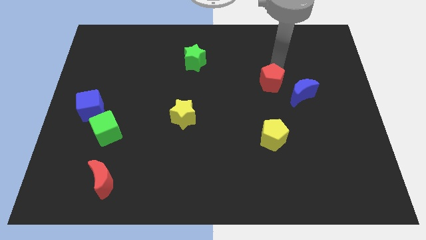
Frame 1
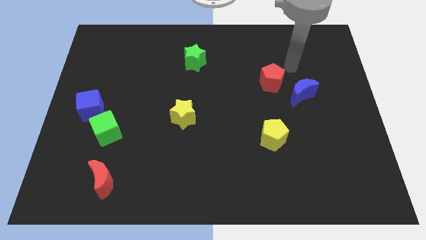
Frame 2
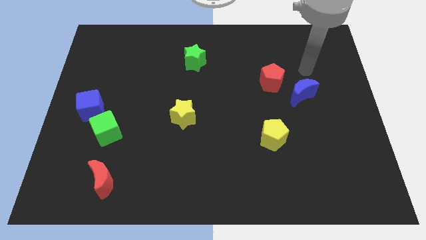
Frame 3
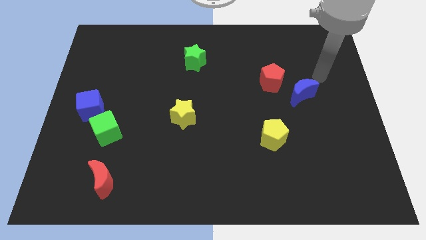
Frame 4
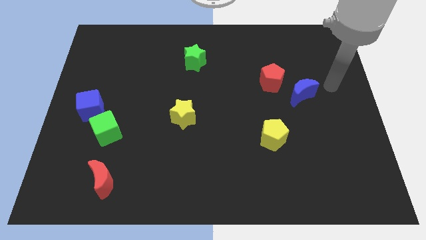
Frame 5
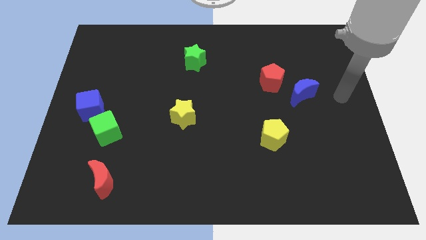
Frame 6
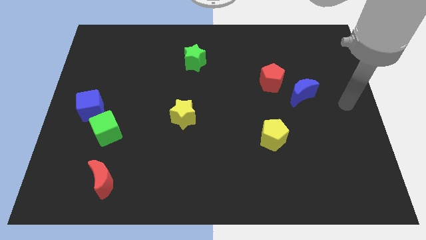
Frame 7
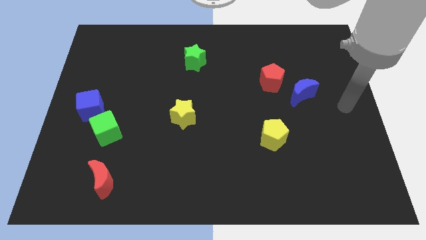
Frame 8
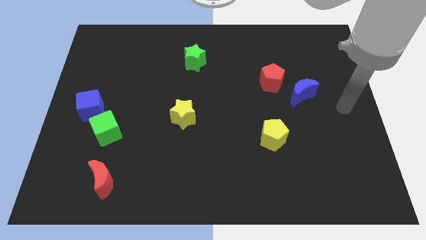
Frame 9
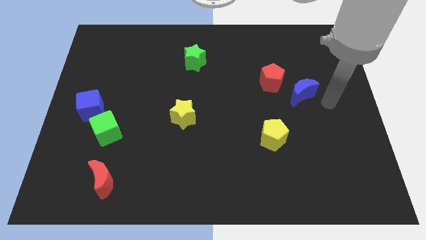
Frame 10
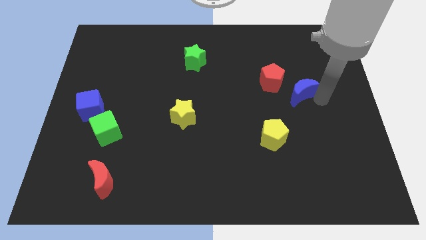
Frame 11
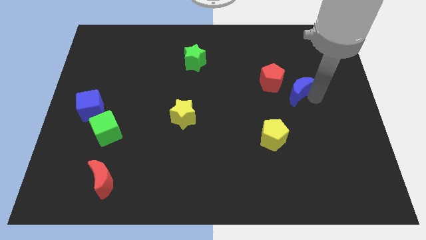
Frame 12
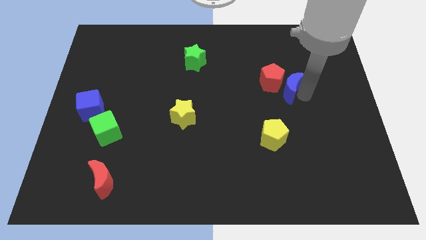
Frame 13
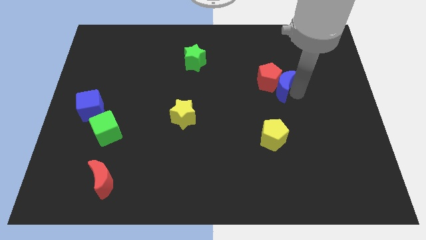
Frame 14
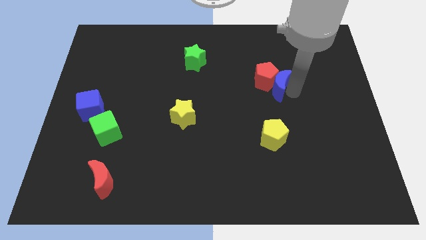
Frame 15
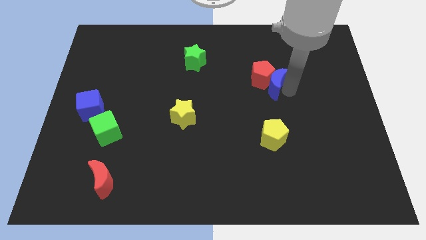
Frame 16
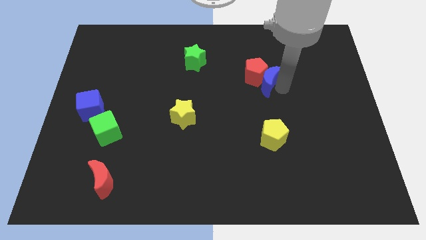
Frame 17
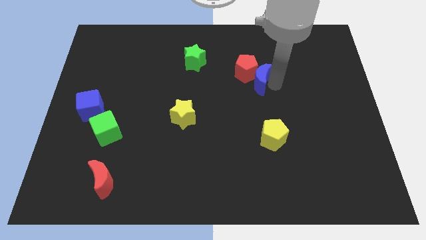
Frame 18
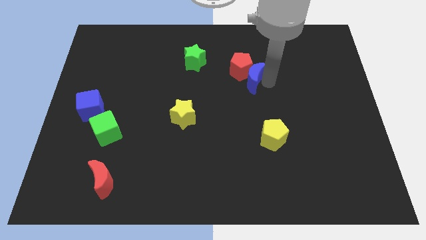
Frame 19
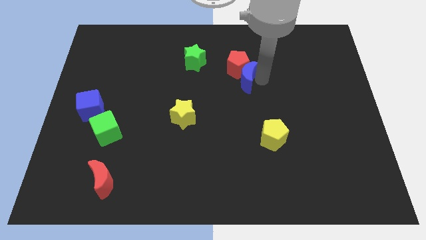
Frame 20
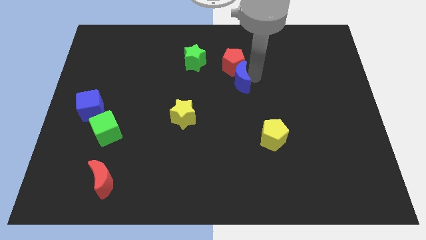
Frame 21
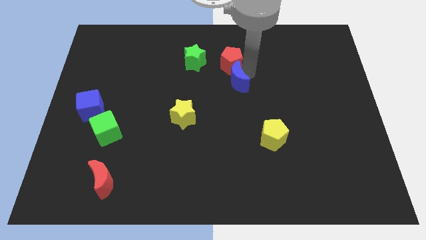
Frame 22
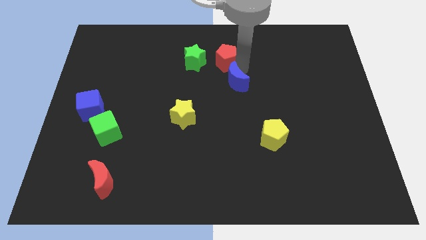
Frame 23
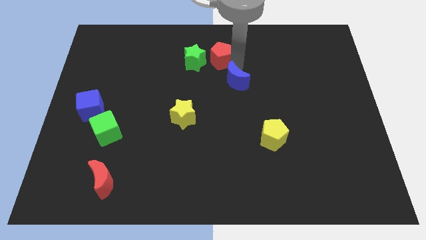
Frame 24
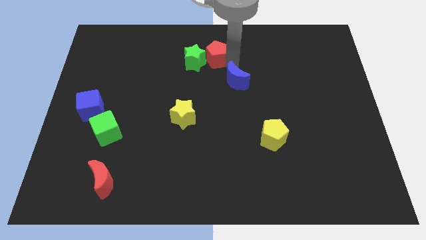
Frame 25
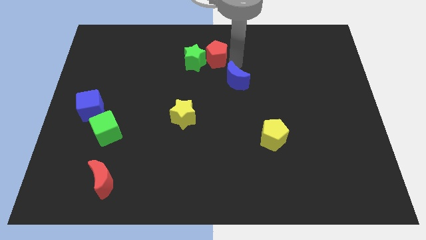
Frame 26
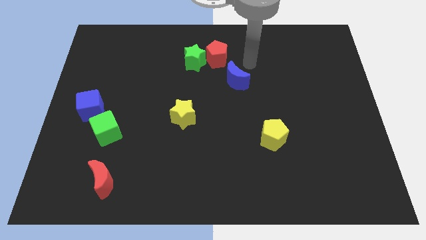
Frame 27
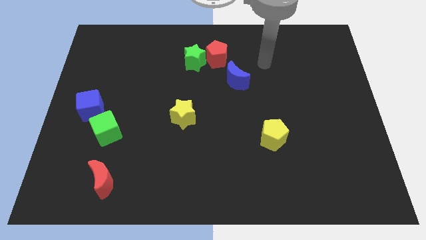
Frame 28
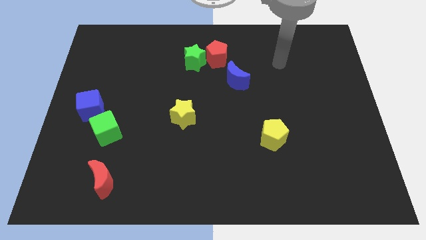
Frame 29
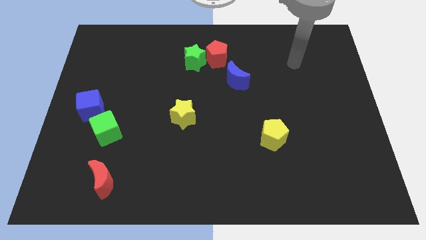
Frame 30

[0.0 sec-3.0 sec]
push the blue crescent along with the red pentagon into the green star

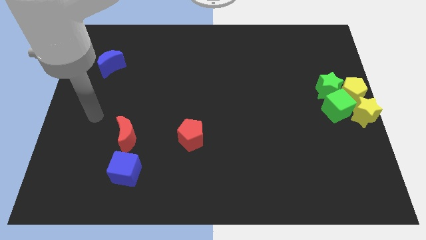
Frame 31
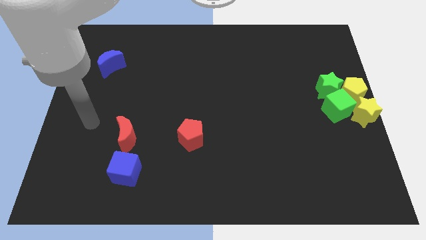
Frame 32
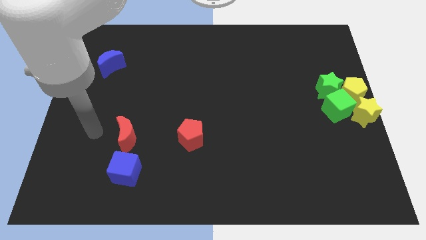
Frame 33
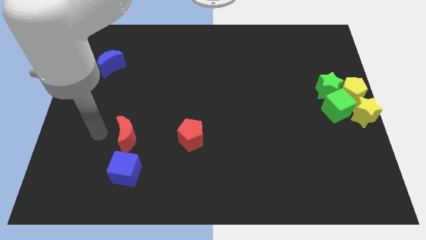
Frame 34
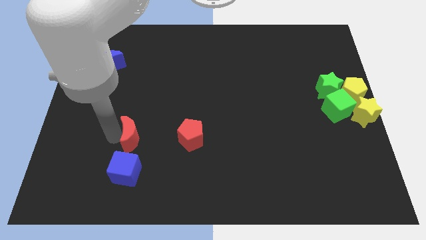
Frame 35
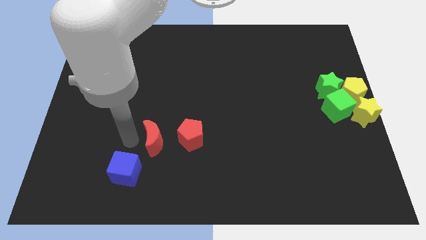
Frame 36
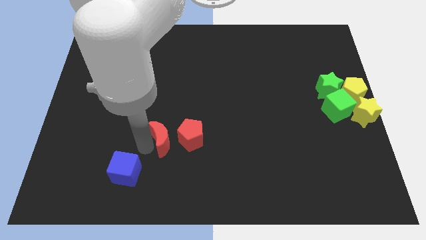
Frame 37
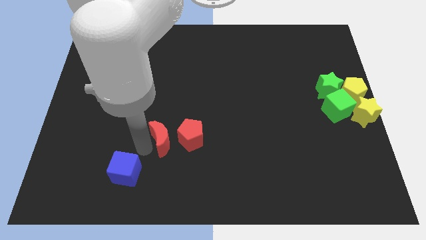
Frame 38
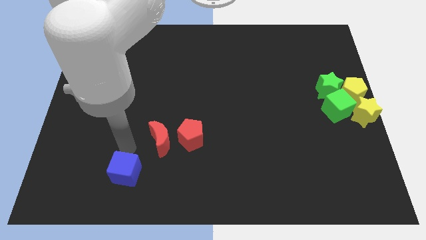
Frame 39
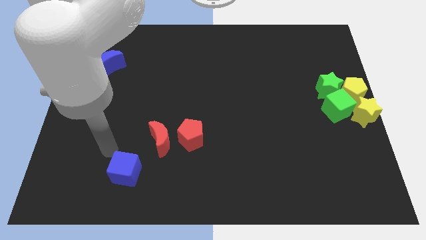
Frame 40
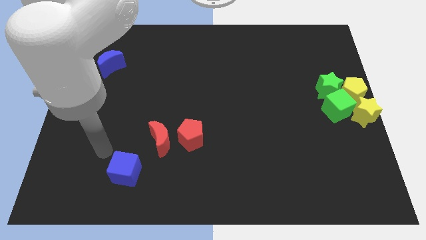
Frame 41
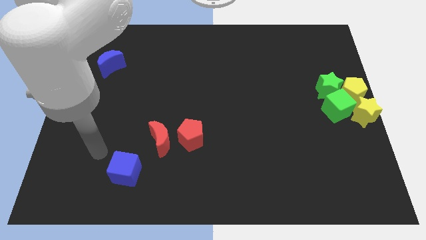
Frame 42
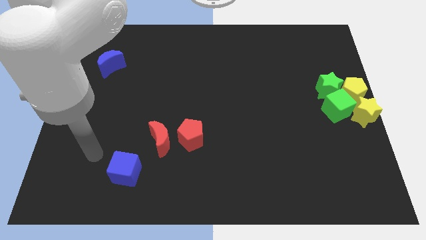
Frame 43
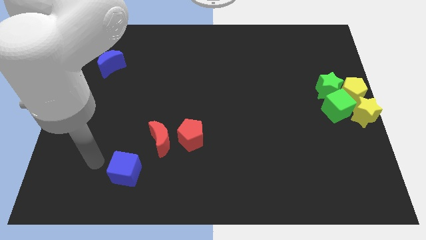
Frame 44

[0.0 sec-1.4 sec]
place the red crescent to the left side of the red pentagon

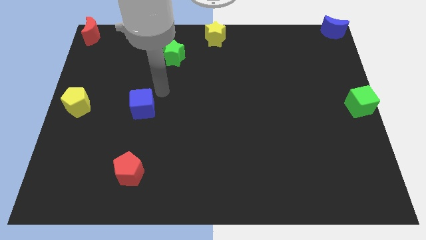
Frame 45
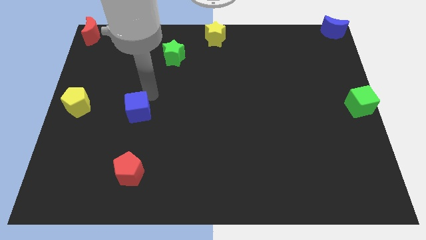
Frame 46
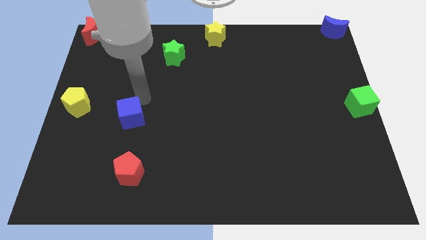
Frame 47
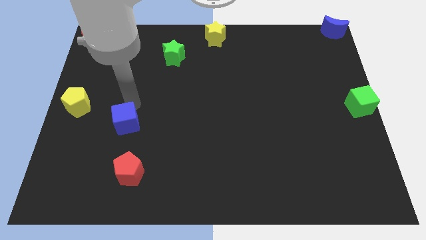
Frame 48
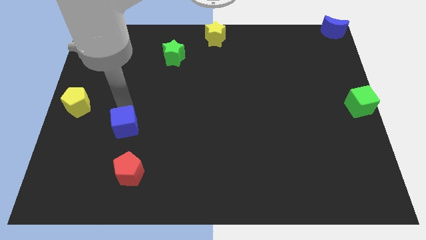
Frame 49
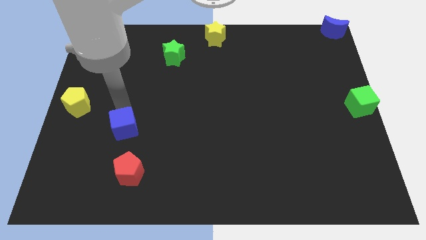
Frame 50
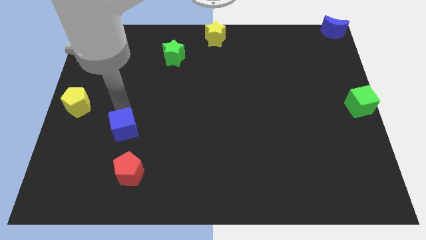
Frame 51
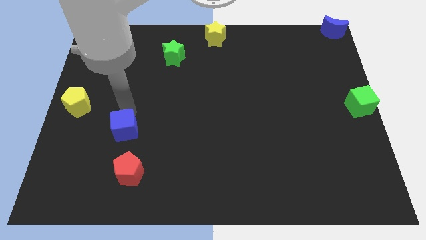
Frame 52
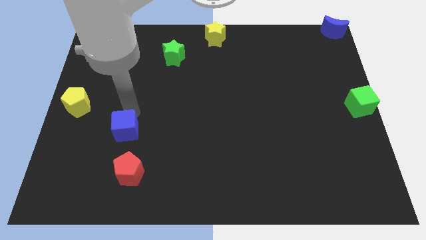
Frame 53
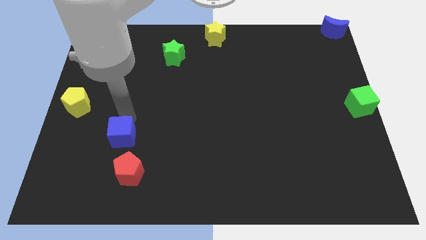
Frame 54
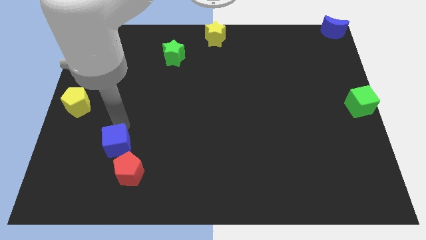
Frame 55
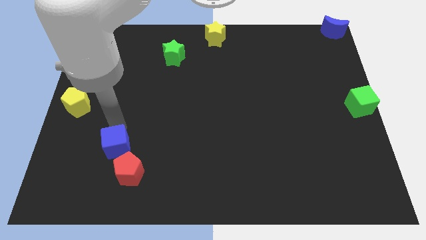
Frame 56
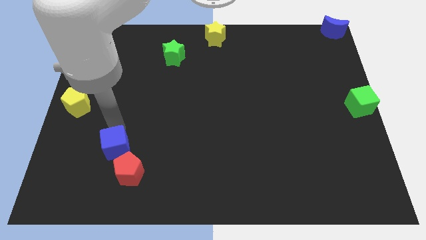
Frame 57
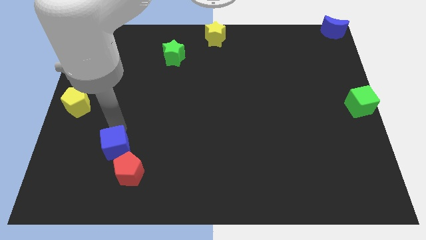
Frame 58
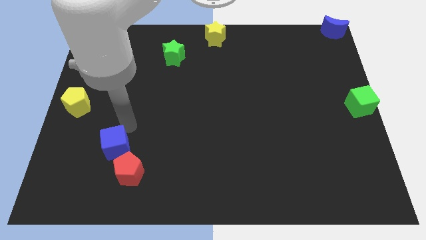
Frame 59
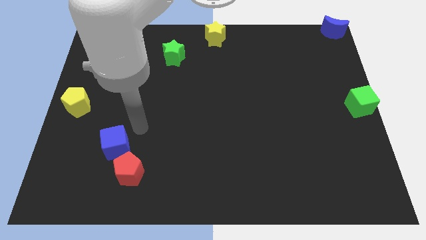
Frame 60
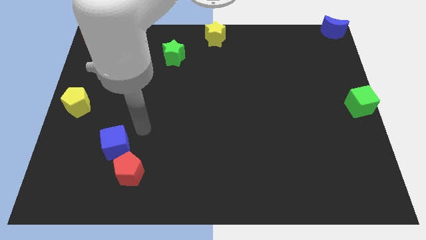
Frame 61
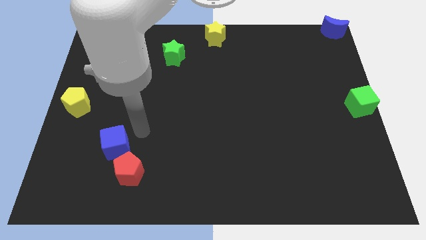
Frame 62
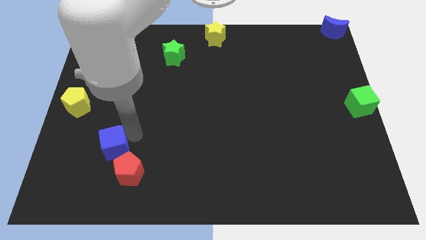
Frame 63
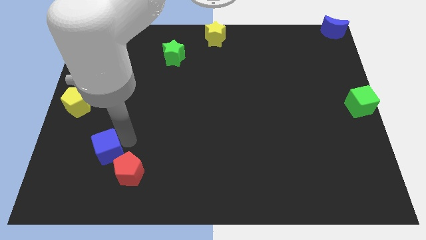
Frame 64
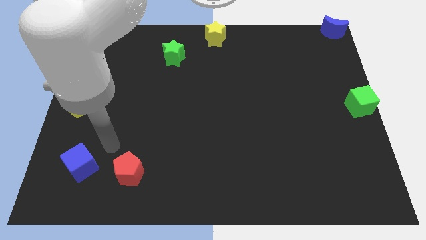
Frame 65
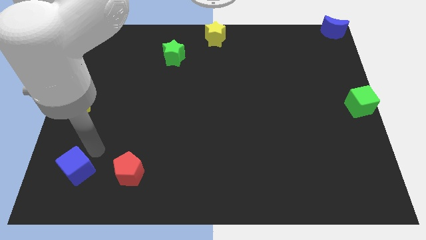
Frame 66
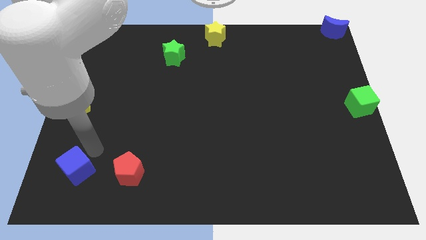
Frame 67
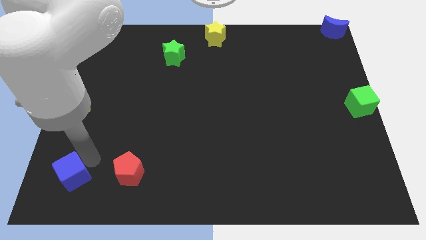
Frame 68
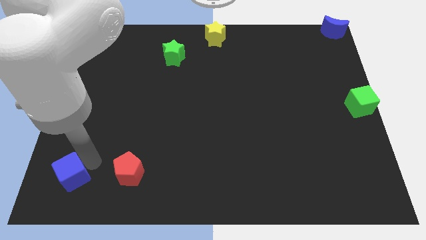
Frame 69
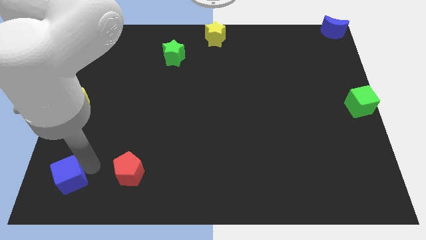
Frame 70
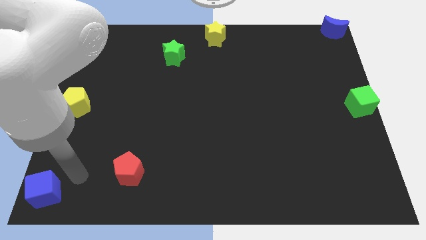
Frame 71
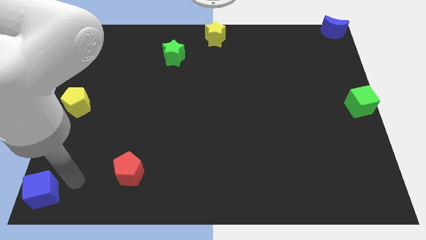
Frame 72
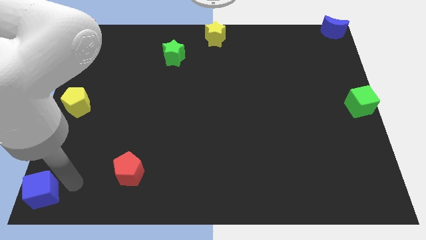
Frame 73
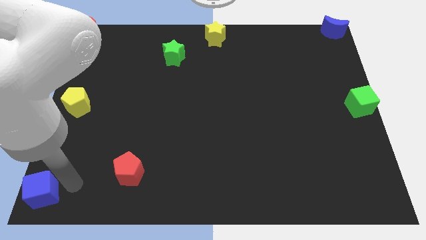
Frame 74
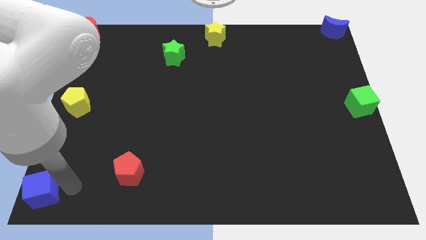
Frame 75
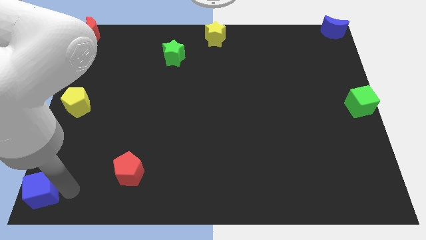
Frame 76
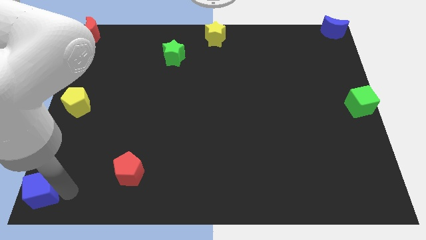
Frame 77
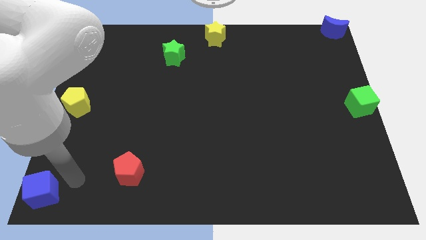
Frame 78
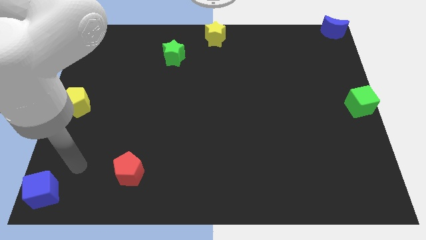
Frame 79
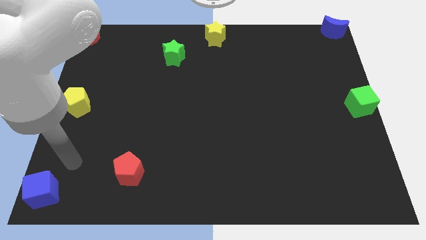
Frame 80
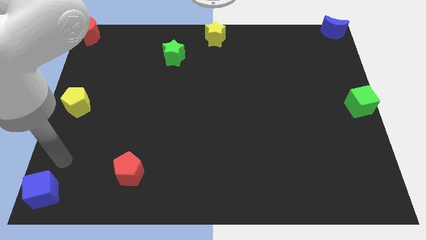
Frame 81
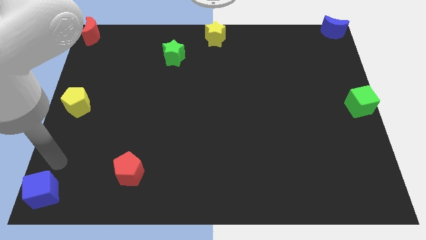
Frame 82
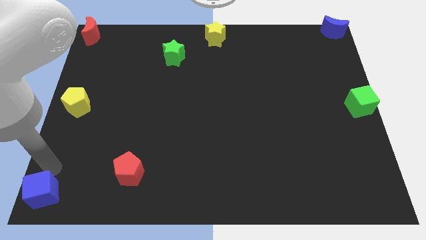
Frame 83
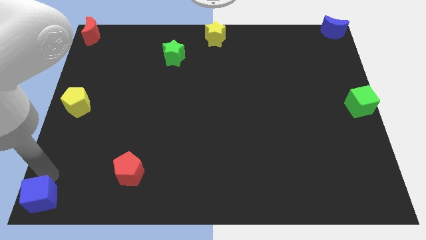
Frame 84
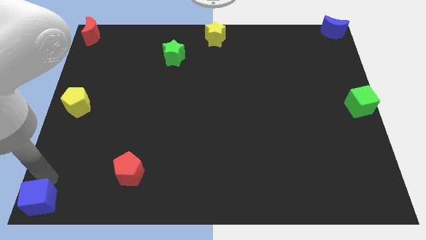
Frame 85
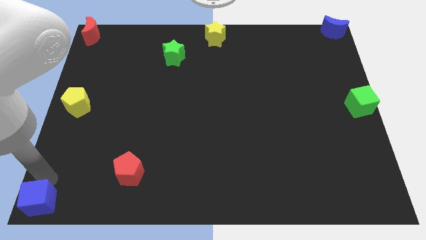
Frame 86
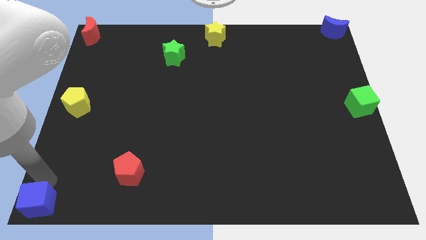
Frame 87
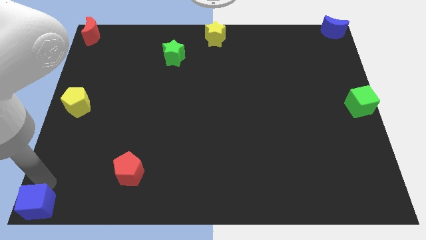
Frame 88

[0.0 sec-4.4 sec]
move the blue cube to the bottom left corner of the board
